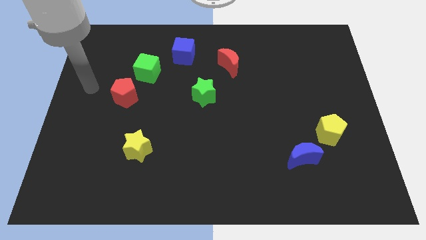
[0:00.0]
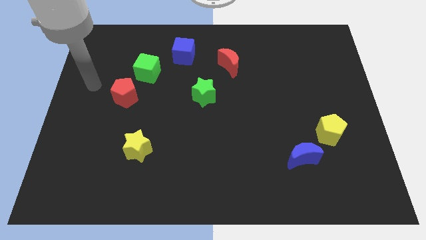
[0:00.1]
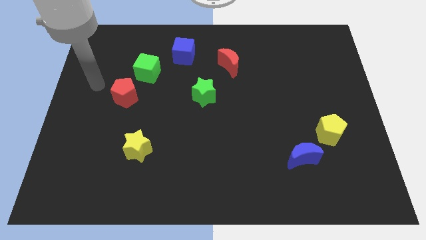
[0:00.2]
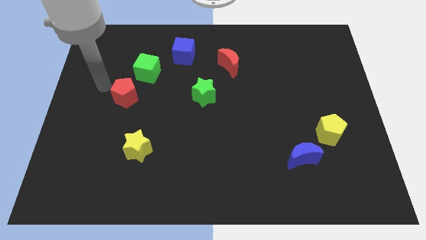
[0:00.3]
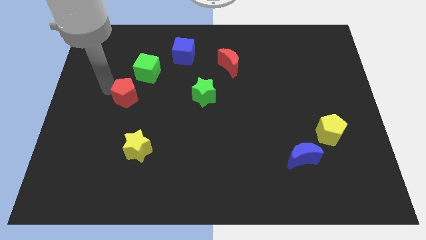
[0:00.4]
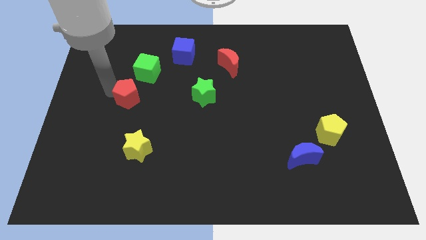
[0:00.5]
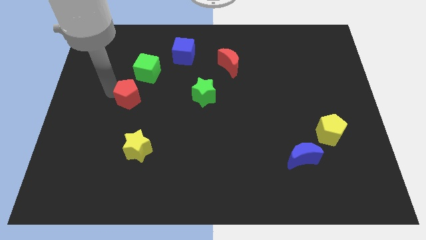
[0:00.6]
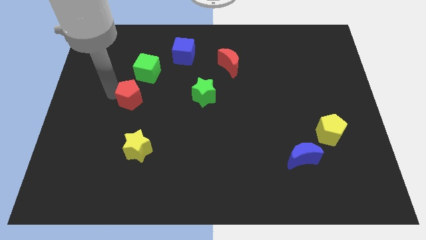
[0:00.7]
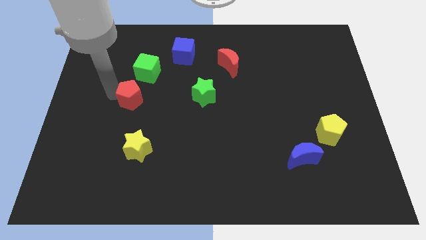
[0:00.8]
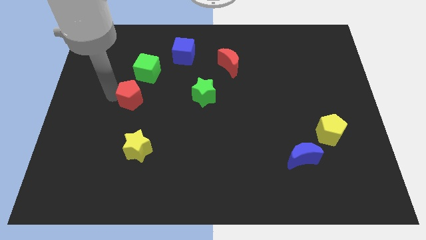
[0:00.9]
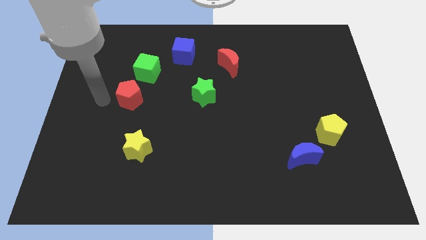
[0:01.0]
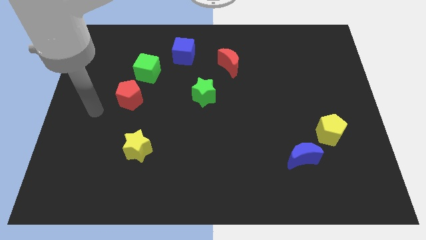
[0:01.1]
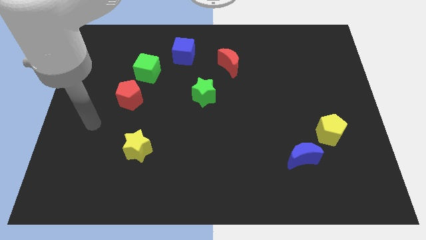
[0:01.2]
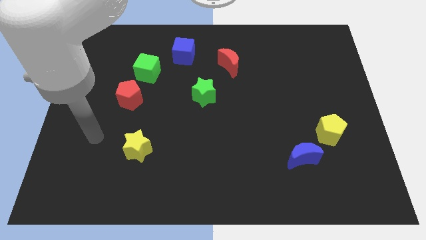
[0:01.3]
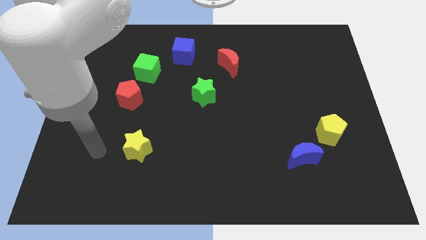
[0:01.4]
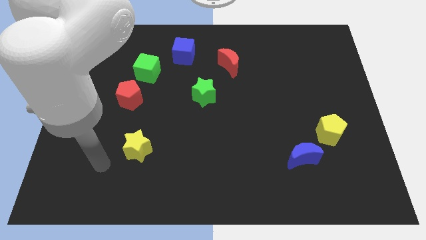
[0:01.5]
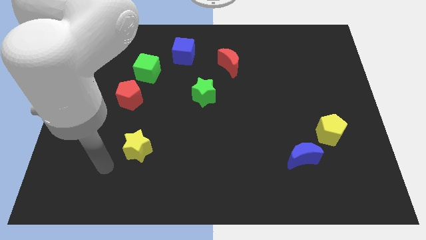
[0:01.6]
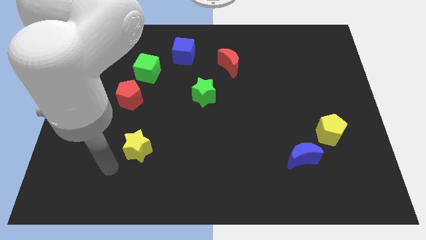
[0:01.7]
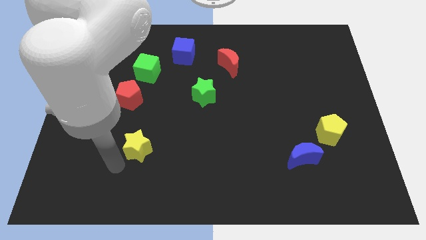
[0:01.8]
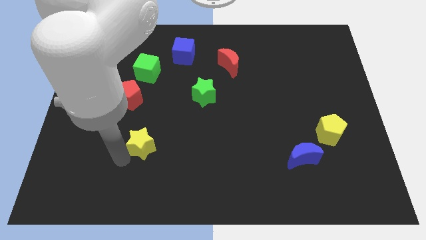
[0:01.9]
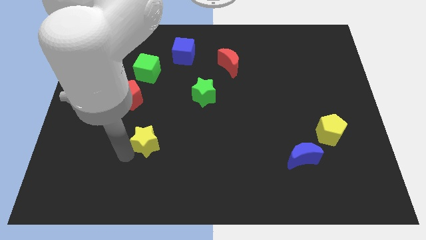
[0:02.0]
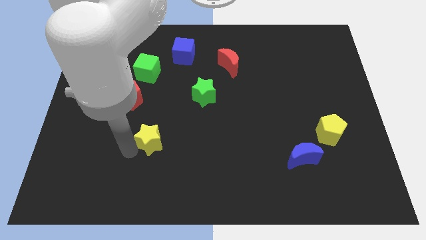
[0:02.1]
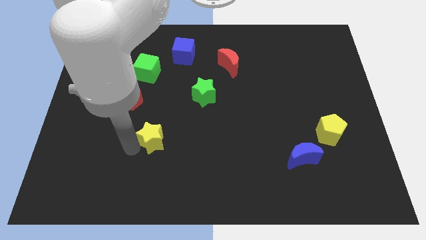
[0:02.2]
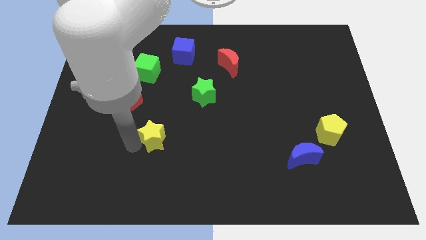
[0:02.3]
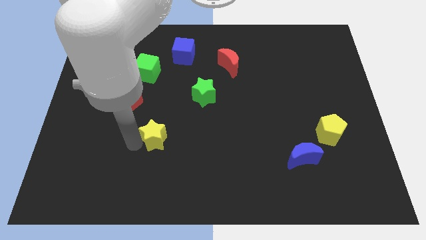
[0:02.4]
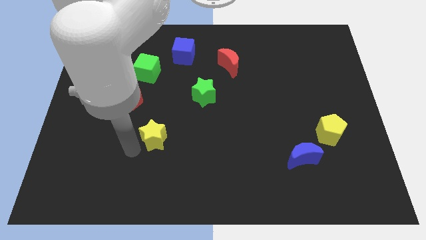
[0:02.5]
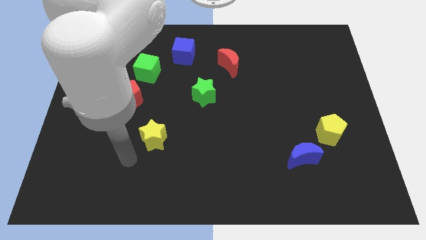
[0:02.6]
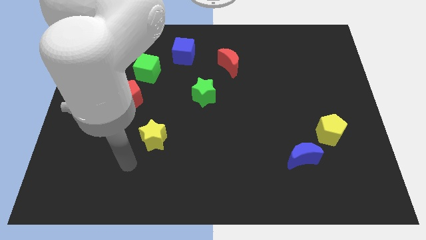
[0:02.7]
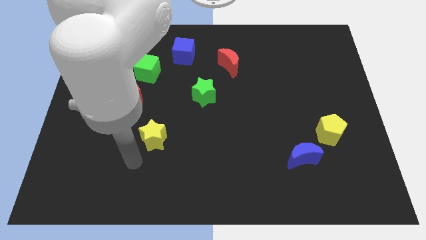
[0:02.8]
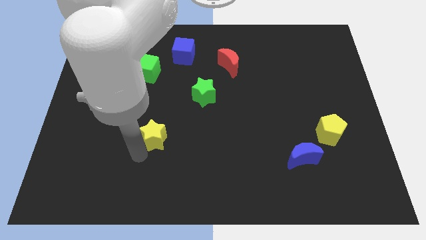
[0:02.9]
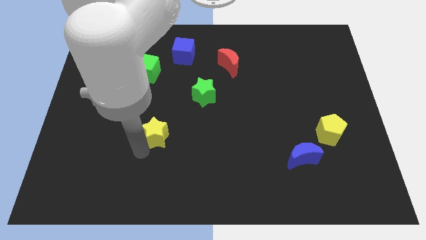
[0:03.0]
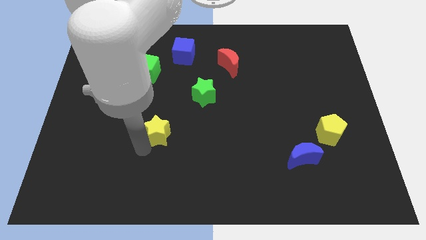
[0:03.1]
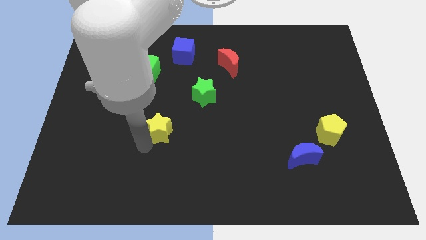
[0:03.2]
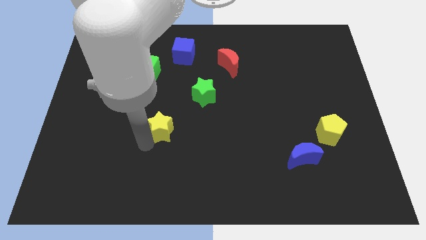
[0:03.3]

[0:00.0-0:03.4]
place the yellow star diagonally to green star

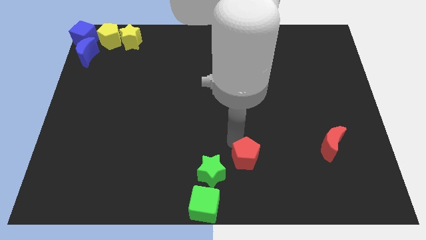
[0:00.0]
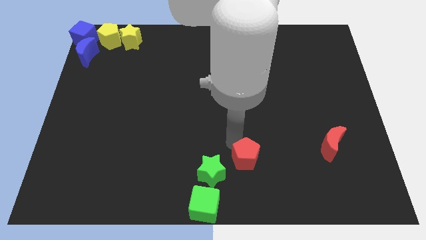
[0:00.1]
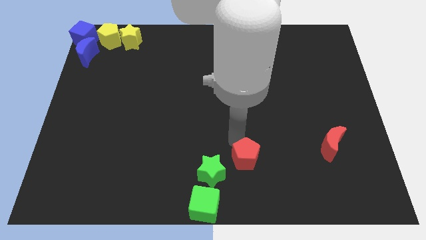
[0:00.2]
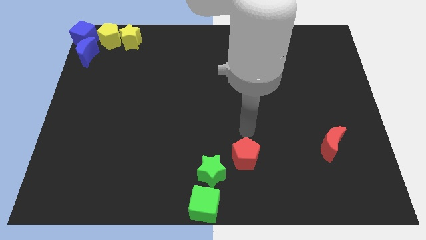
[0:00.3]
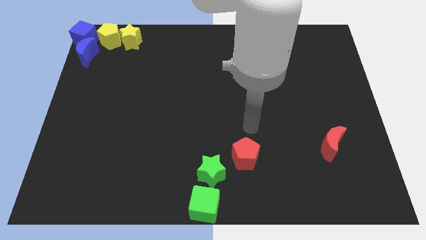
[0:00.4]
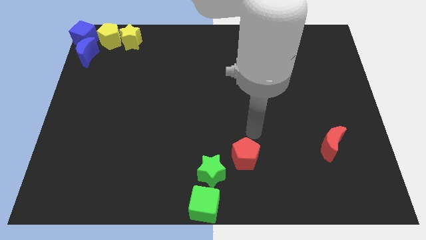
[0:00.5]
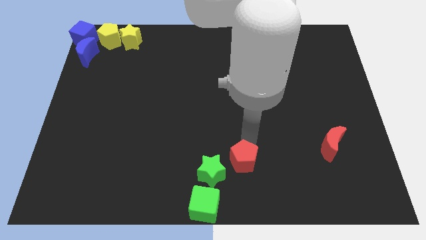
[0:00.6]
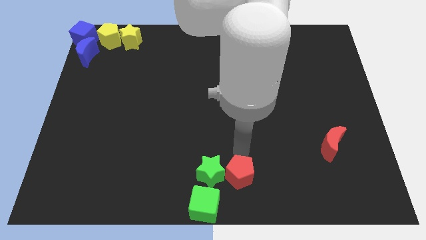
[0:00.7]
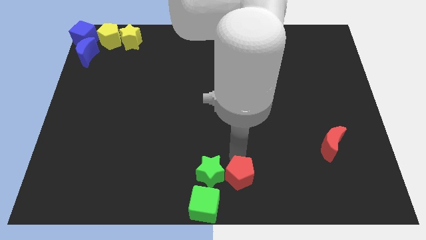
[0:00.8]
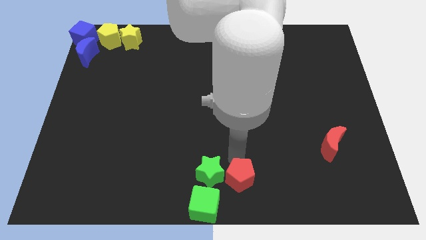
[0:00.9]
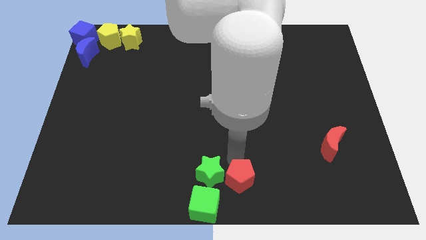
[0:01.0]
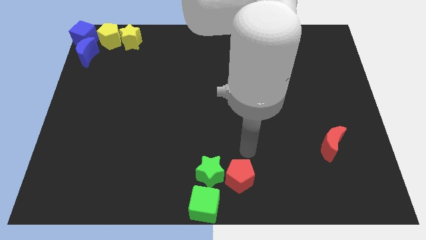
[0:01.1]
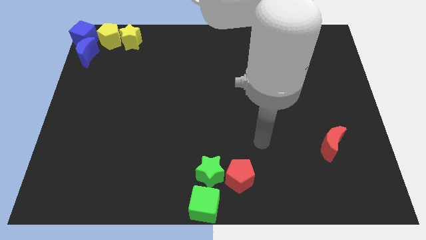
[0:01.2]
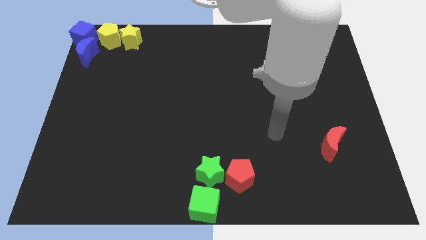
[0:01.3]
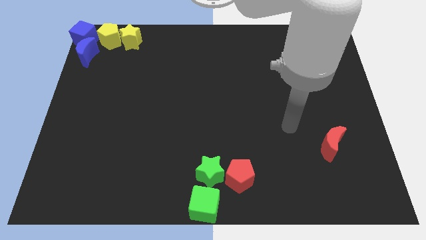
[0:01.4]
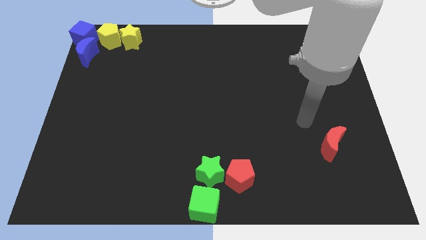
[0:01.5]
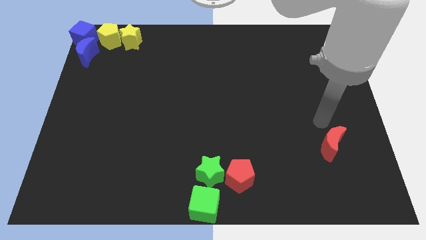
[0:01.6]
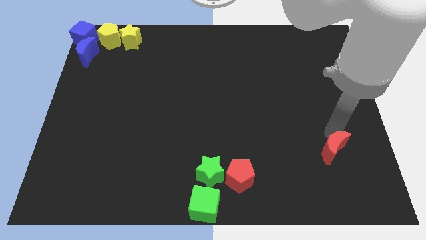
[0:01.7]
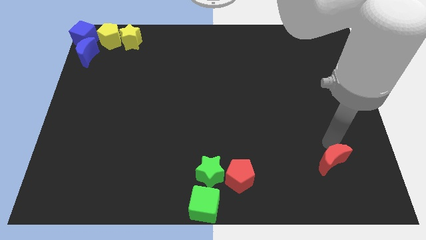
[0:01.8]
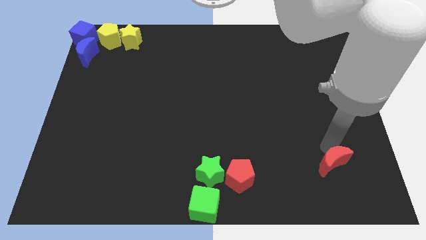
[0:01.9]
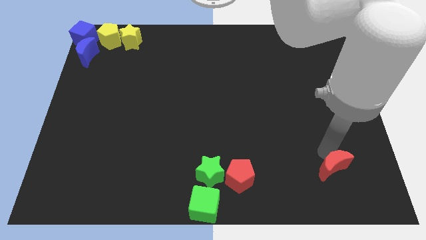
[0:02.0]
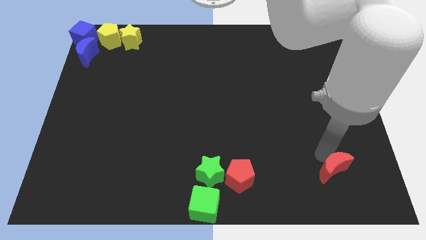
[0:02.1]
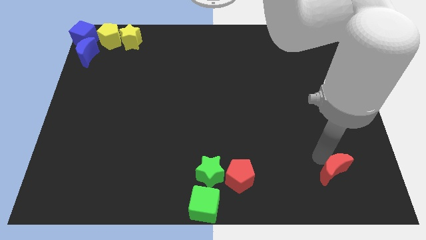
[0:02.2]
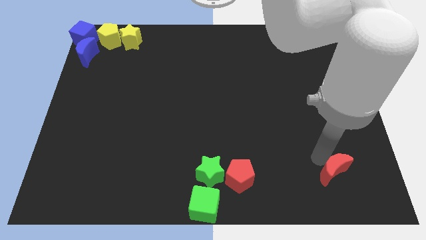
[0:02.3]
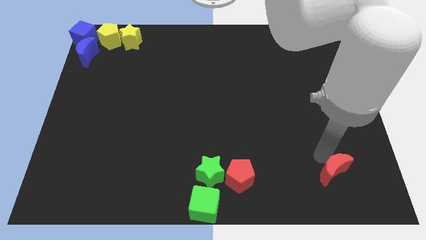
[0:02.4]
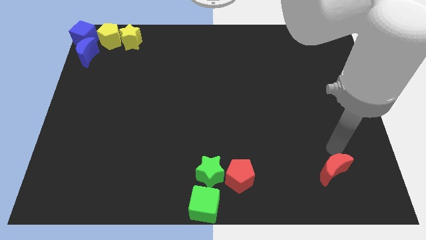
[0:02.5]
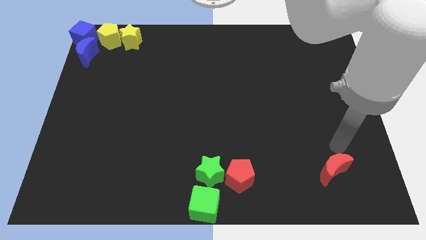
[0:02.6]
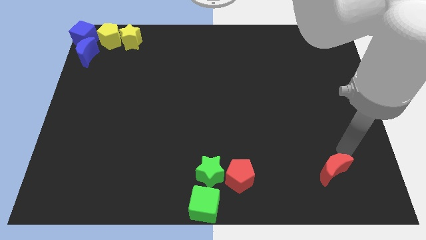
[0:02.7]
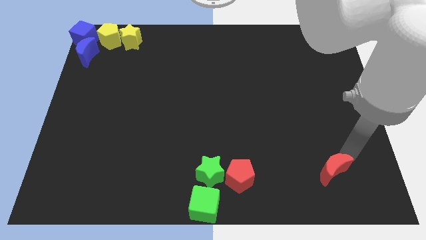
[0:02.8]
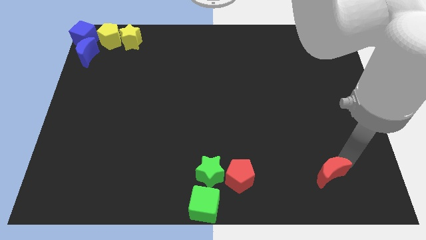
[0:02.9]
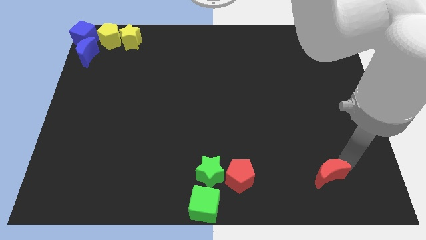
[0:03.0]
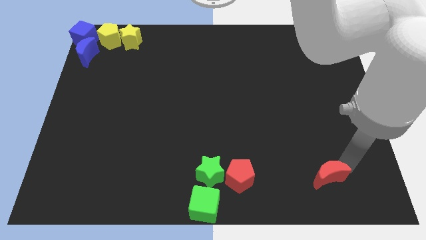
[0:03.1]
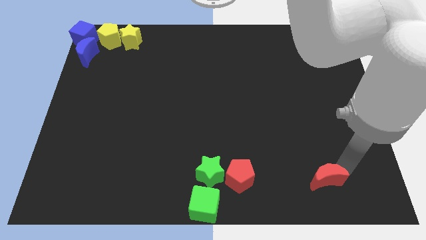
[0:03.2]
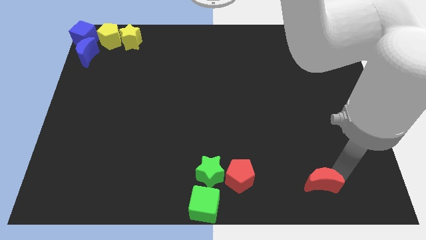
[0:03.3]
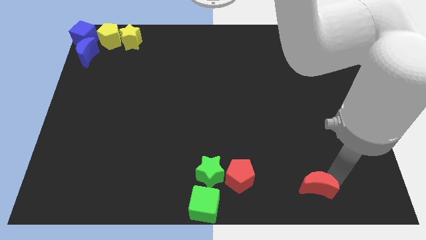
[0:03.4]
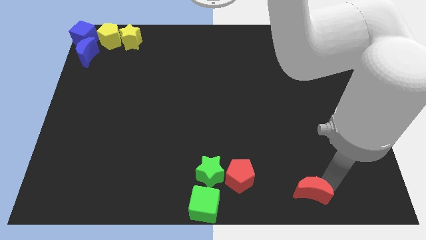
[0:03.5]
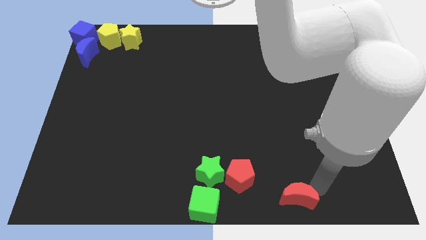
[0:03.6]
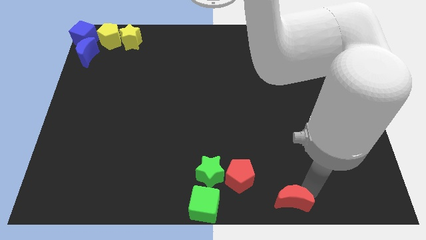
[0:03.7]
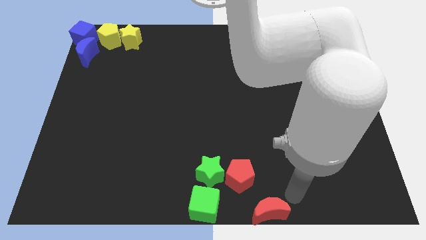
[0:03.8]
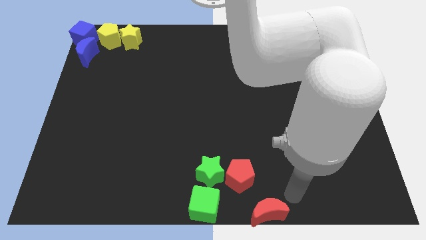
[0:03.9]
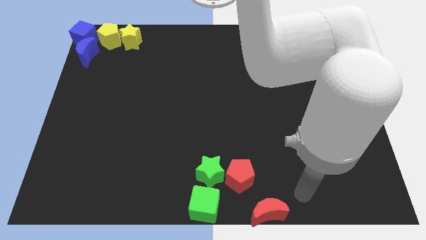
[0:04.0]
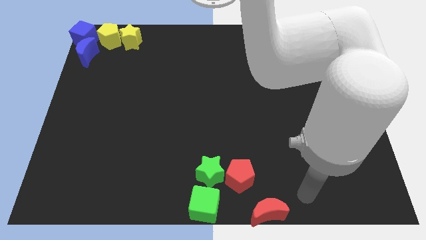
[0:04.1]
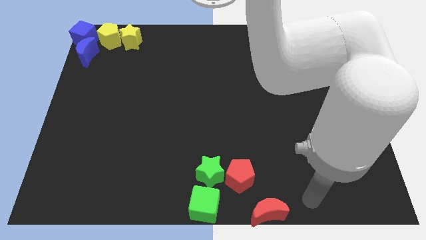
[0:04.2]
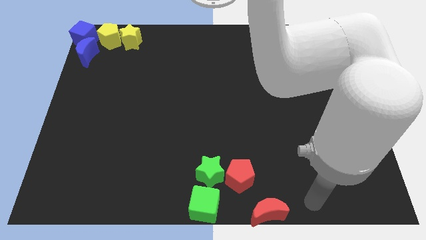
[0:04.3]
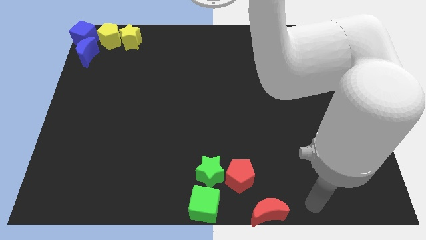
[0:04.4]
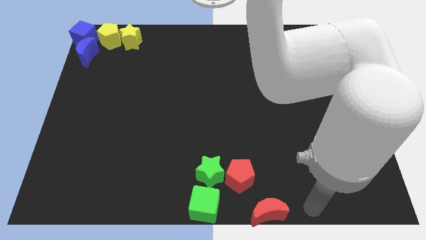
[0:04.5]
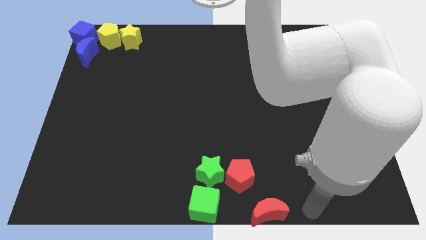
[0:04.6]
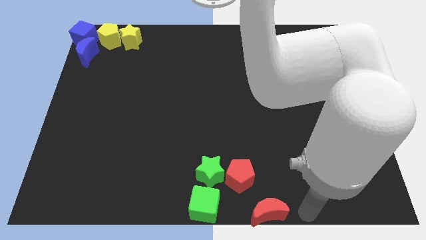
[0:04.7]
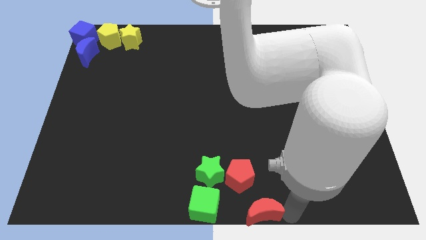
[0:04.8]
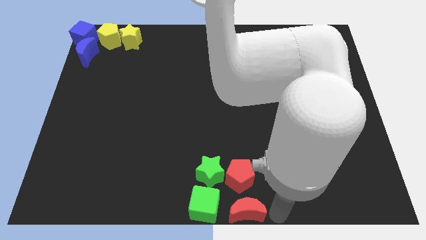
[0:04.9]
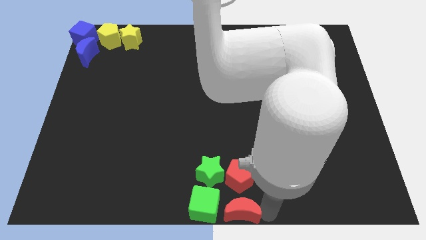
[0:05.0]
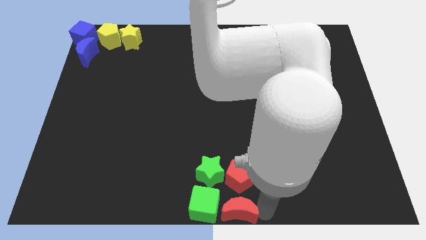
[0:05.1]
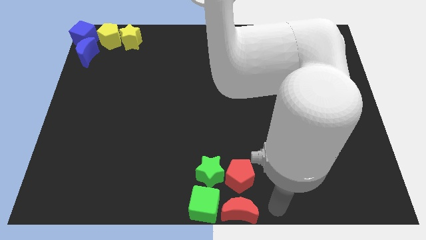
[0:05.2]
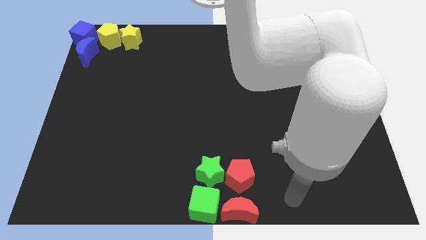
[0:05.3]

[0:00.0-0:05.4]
place the red blocks vertically at the bottom side of the board
